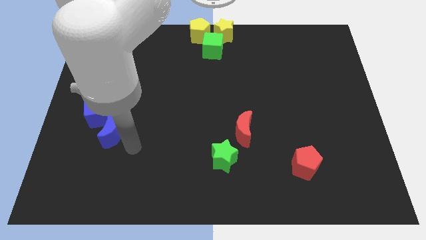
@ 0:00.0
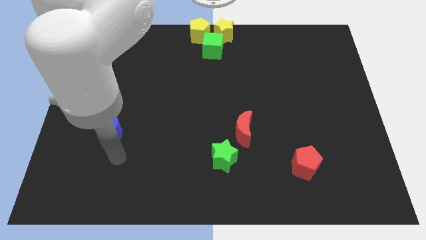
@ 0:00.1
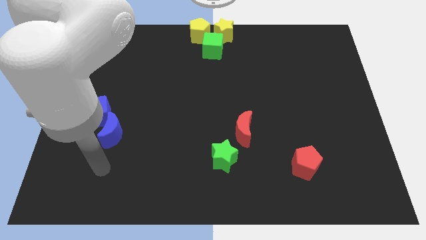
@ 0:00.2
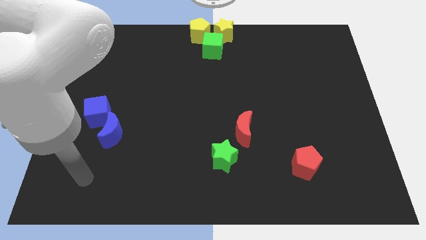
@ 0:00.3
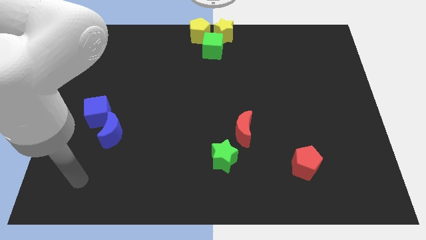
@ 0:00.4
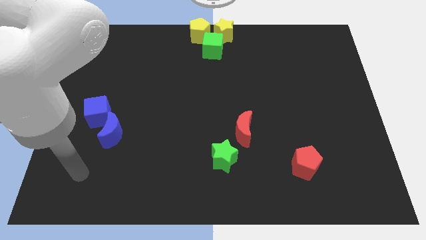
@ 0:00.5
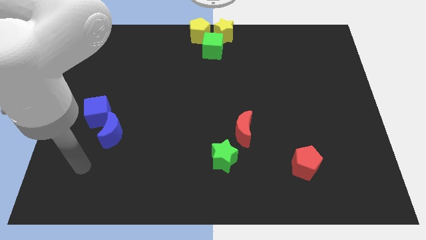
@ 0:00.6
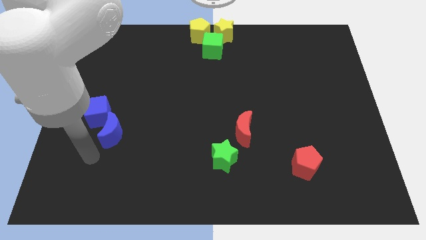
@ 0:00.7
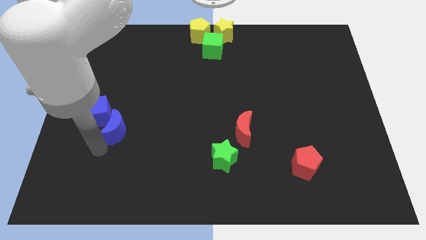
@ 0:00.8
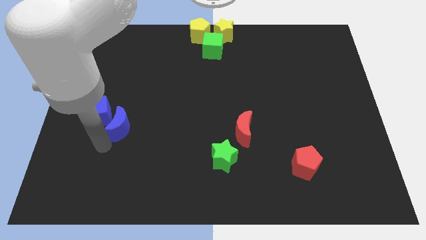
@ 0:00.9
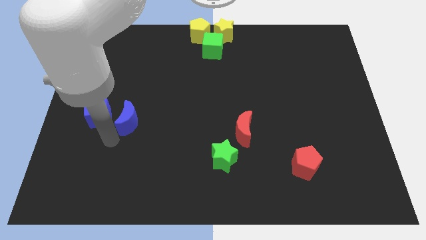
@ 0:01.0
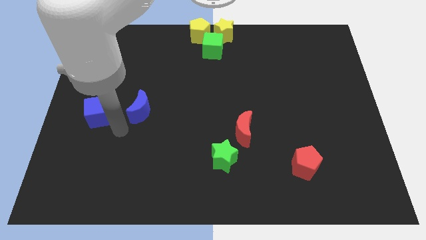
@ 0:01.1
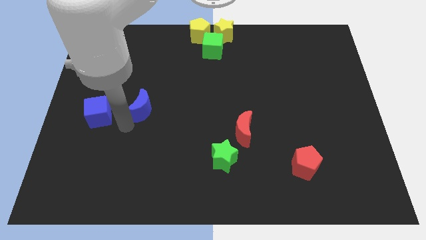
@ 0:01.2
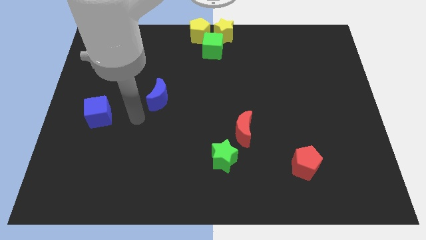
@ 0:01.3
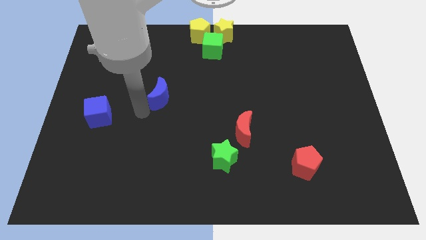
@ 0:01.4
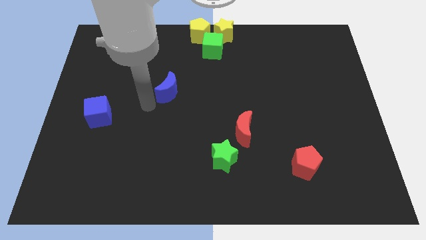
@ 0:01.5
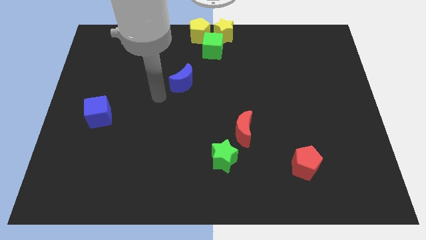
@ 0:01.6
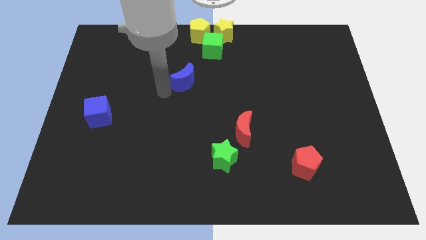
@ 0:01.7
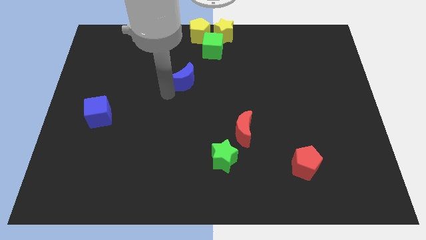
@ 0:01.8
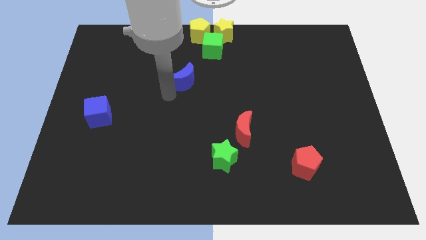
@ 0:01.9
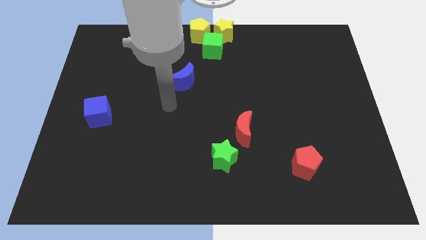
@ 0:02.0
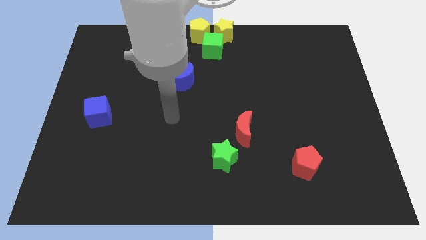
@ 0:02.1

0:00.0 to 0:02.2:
move blue moon towards the green cube

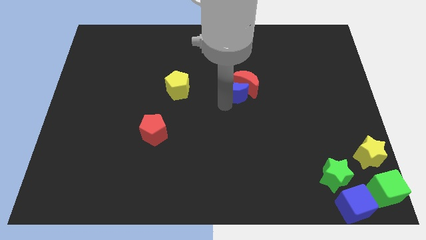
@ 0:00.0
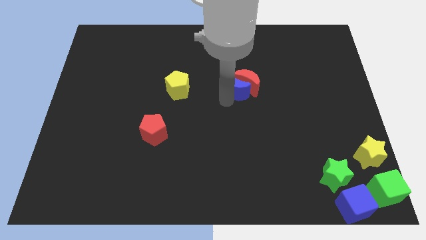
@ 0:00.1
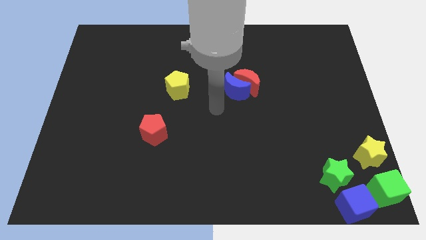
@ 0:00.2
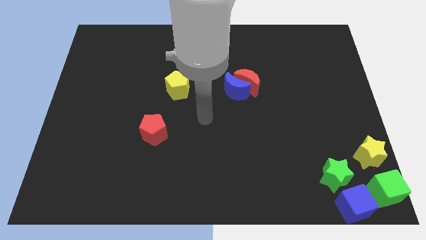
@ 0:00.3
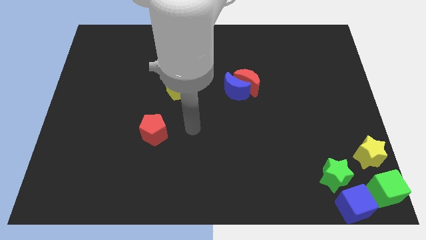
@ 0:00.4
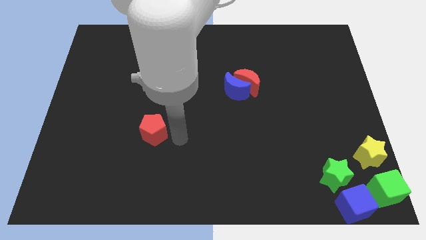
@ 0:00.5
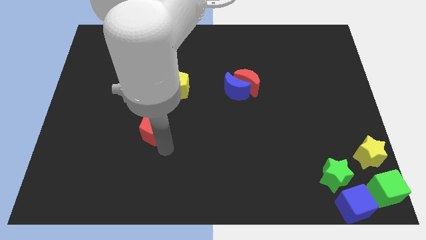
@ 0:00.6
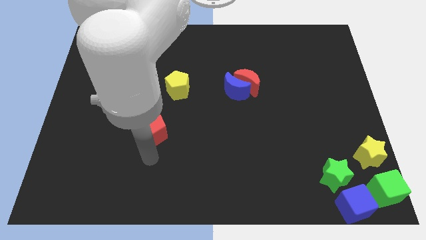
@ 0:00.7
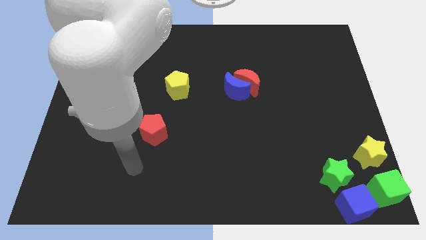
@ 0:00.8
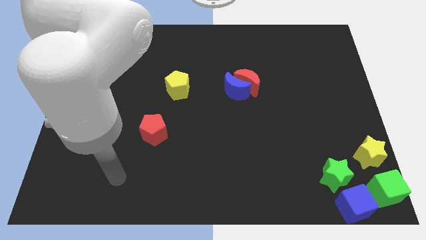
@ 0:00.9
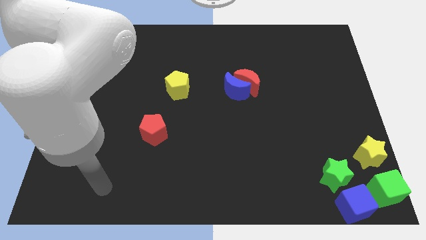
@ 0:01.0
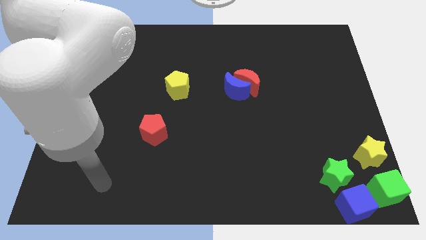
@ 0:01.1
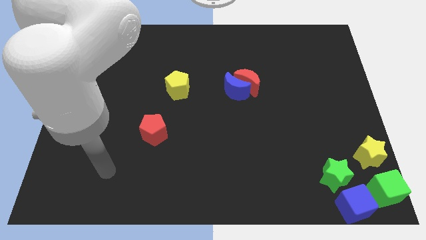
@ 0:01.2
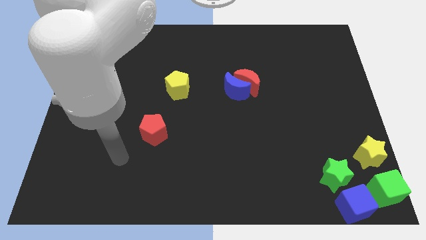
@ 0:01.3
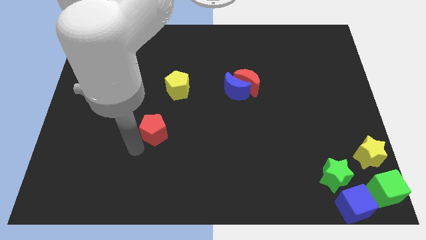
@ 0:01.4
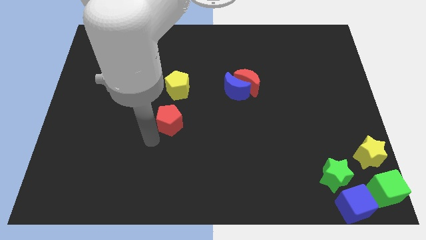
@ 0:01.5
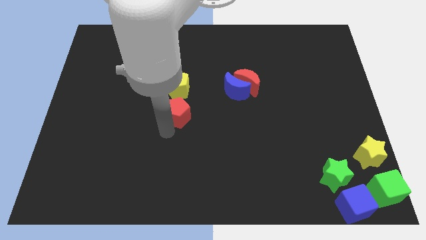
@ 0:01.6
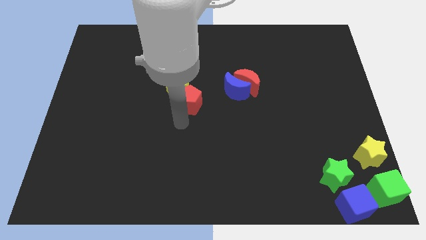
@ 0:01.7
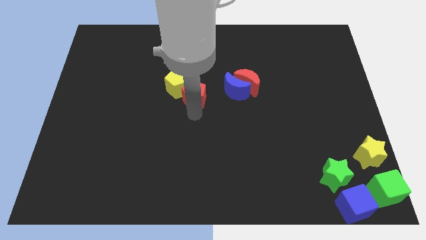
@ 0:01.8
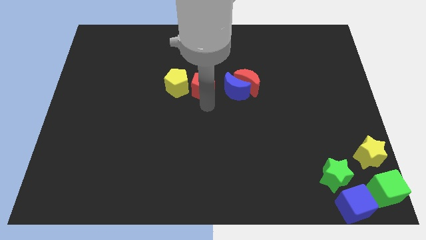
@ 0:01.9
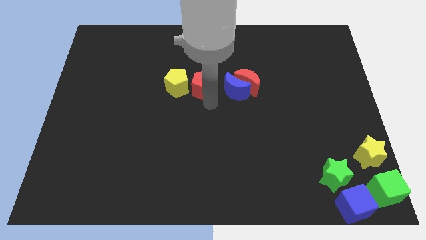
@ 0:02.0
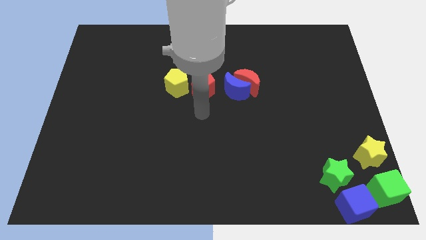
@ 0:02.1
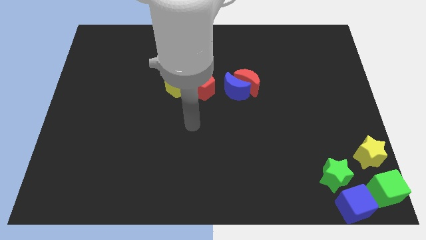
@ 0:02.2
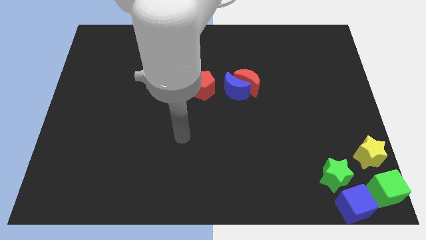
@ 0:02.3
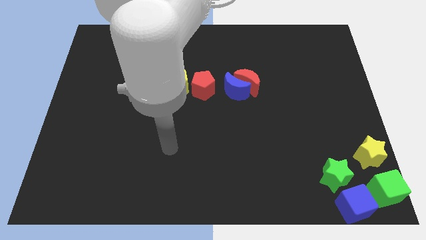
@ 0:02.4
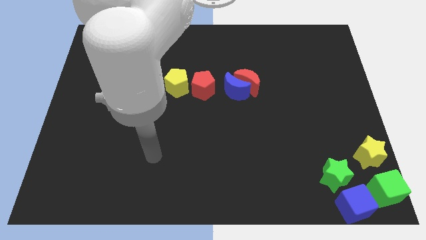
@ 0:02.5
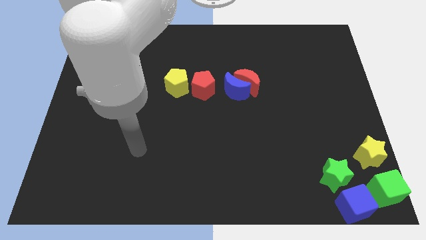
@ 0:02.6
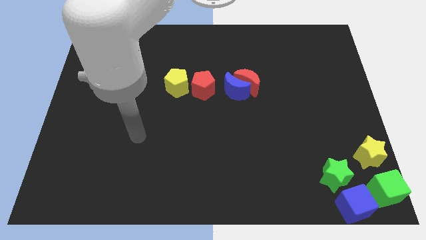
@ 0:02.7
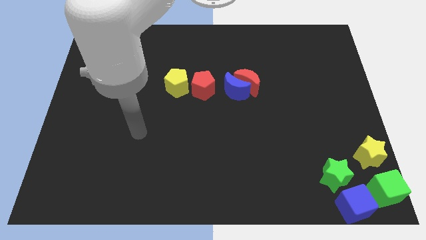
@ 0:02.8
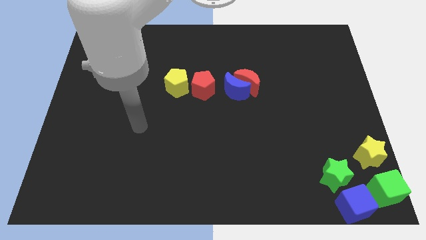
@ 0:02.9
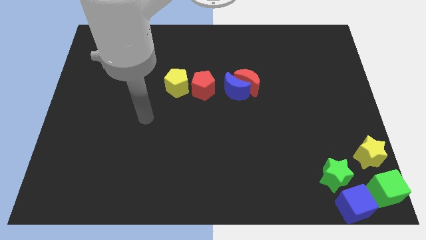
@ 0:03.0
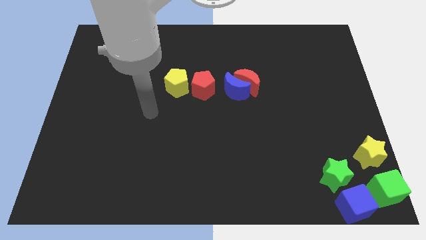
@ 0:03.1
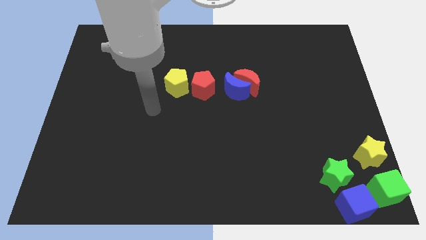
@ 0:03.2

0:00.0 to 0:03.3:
place the red pentagon right of the yellow pentagon

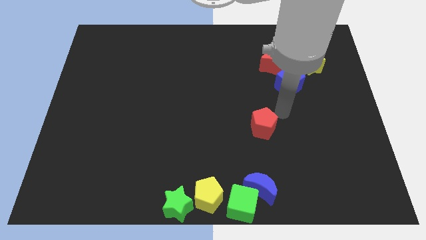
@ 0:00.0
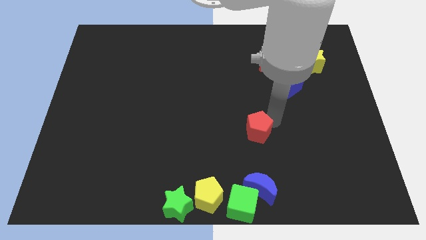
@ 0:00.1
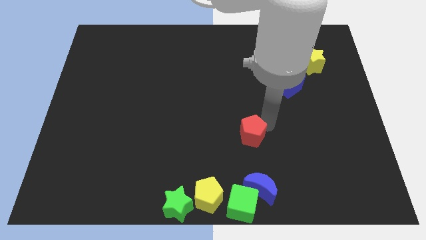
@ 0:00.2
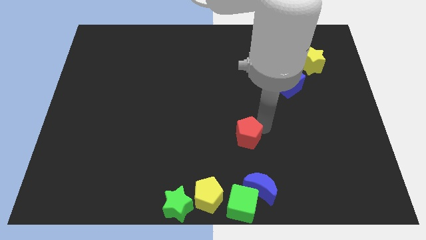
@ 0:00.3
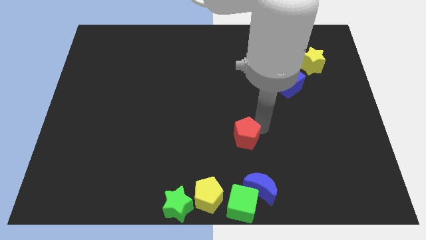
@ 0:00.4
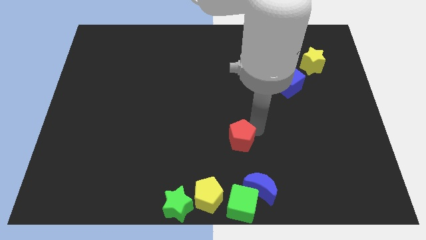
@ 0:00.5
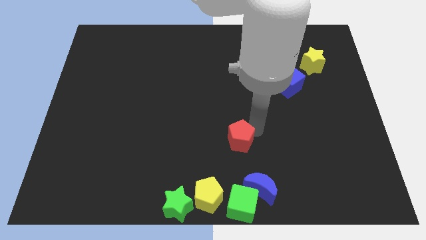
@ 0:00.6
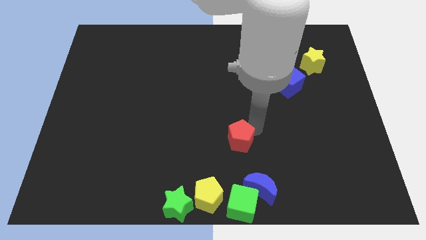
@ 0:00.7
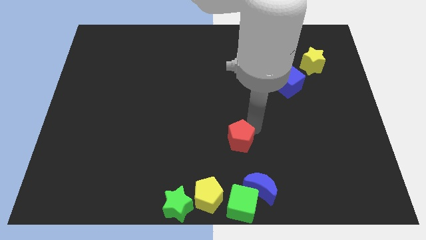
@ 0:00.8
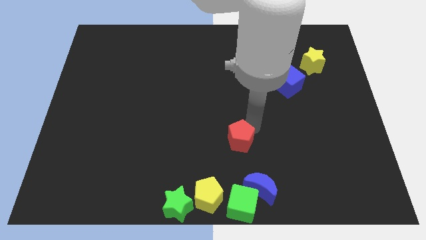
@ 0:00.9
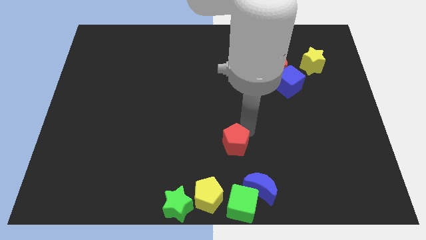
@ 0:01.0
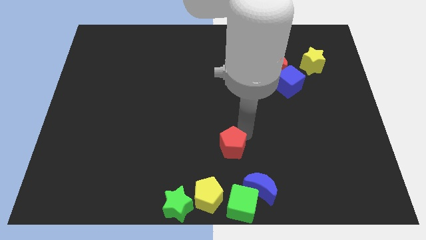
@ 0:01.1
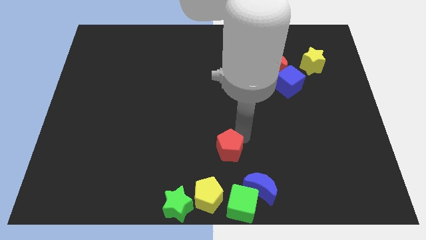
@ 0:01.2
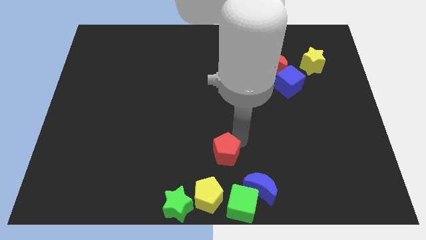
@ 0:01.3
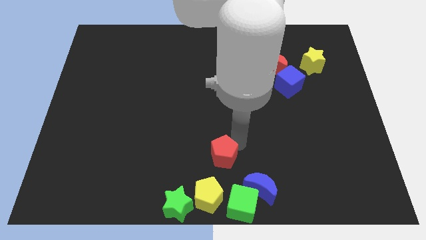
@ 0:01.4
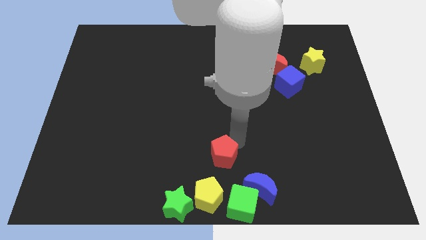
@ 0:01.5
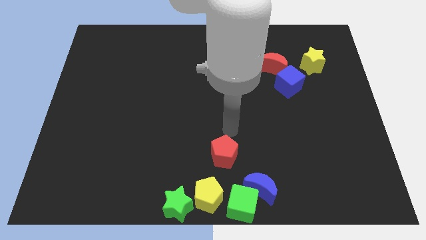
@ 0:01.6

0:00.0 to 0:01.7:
move the red pentagon to the top of the yellow pentagon

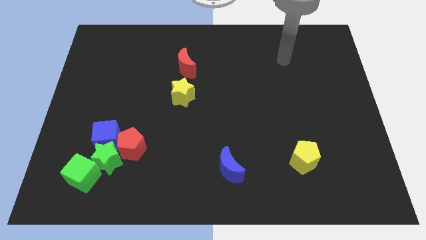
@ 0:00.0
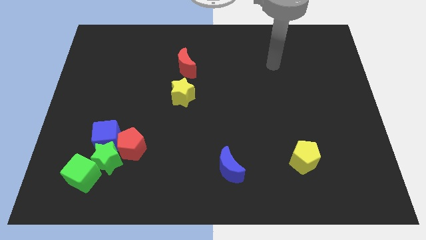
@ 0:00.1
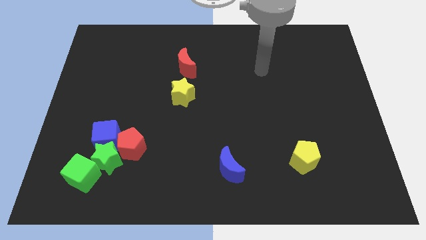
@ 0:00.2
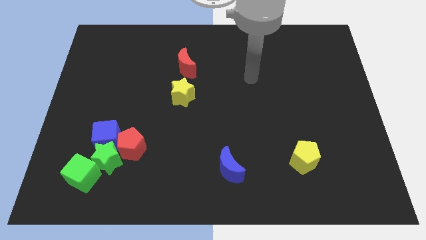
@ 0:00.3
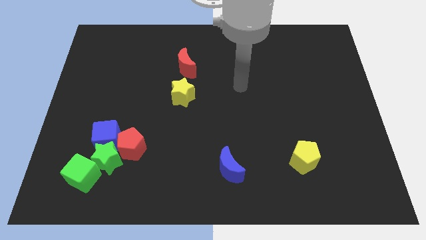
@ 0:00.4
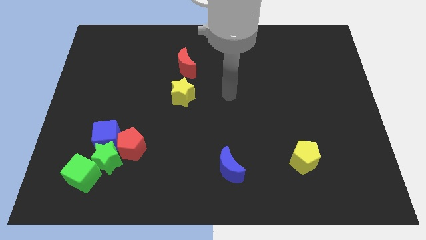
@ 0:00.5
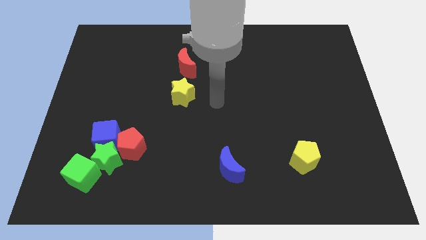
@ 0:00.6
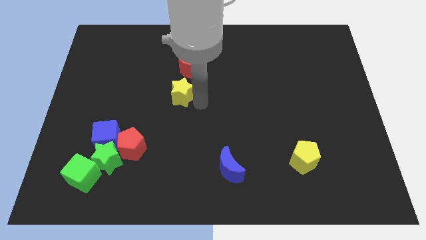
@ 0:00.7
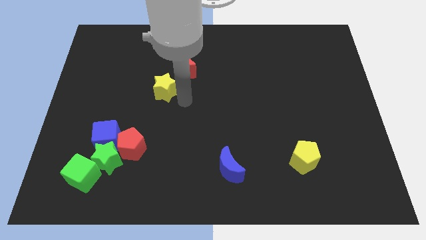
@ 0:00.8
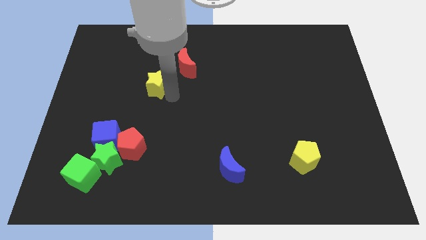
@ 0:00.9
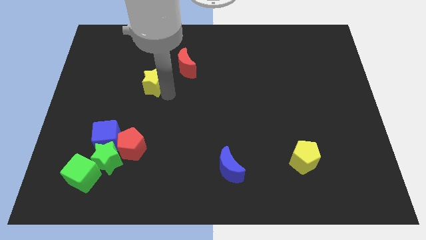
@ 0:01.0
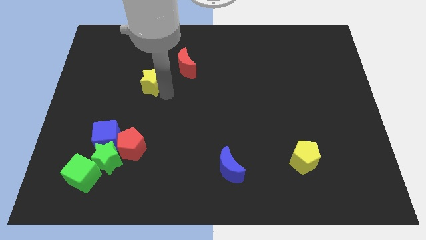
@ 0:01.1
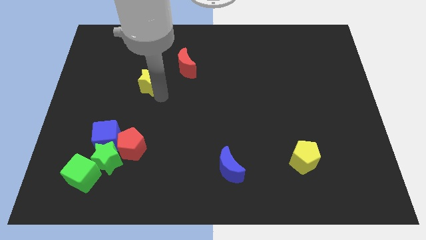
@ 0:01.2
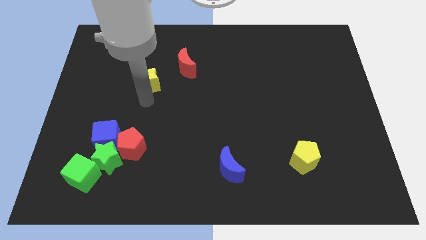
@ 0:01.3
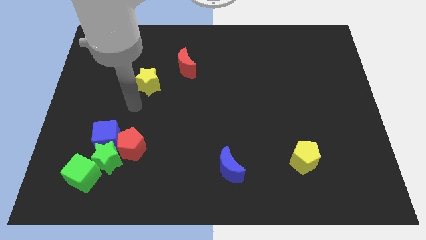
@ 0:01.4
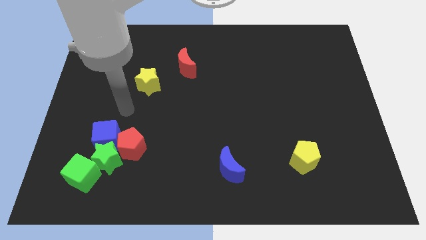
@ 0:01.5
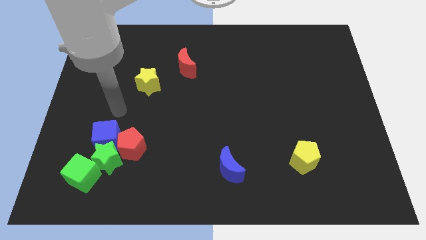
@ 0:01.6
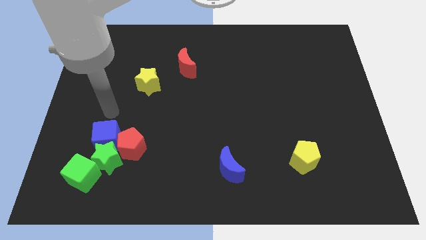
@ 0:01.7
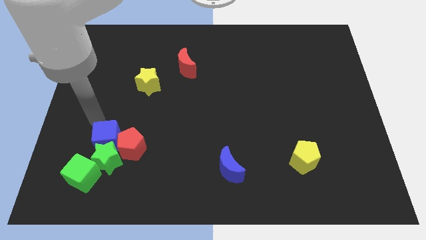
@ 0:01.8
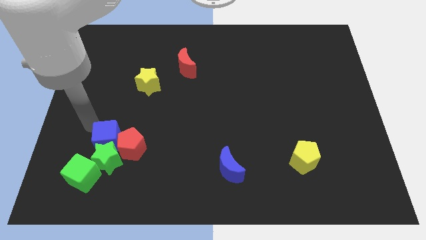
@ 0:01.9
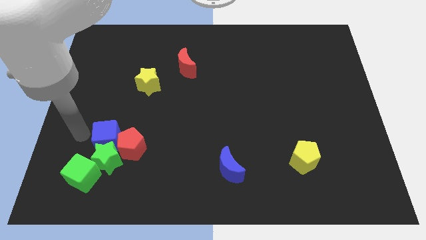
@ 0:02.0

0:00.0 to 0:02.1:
move the yellow star towards right
